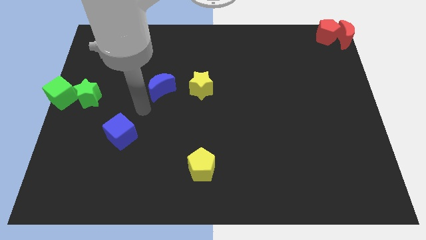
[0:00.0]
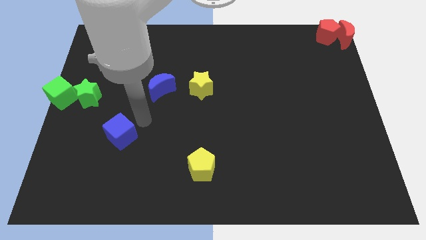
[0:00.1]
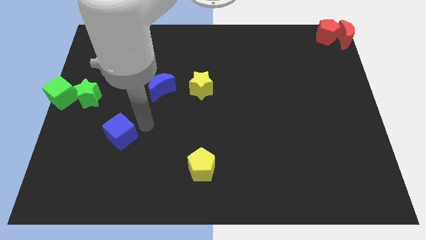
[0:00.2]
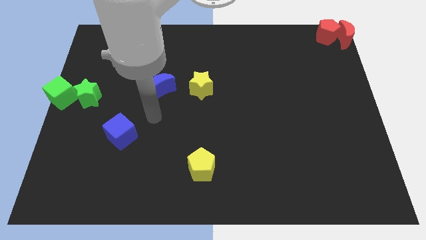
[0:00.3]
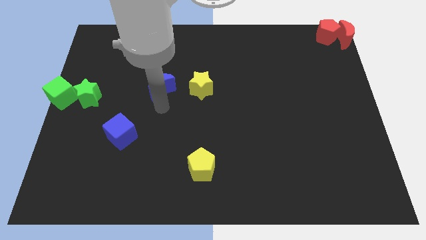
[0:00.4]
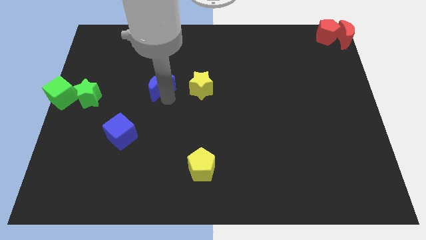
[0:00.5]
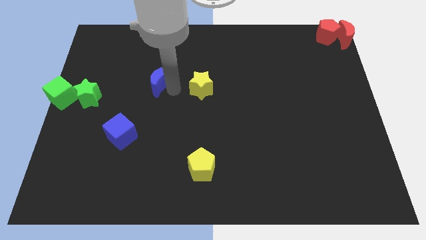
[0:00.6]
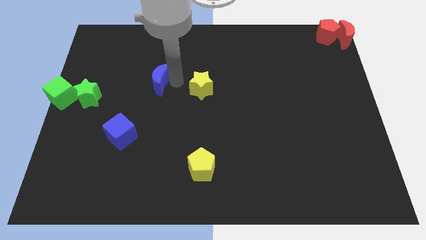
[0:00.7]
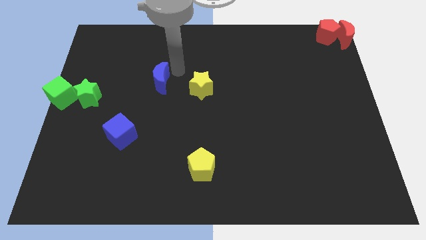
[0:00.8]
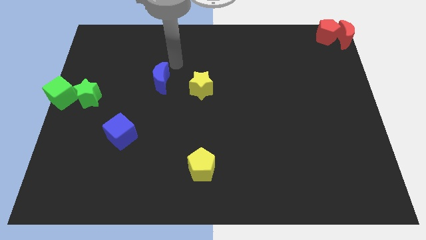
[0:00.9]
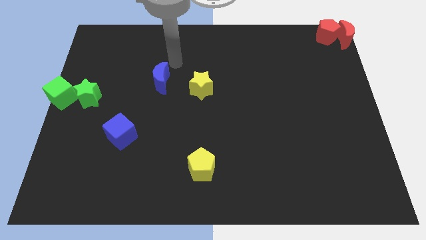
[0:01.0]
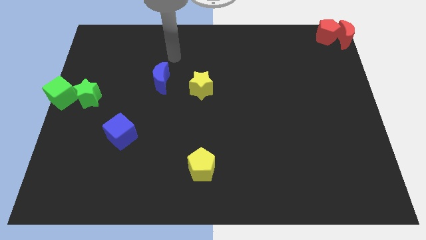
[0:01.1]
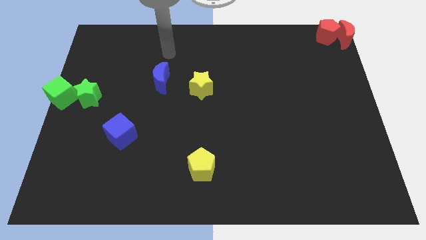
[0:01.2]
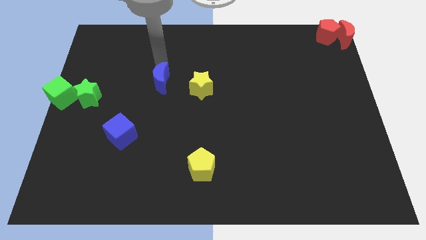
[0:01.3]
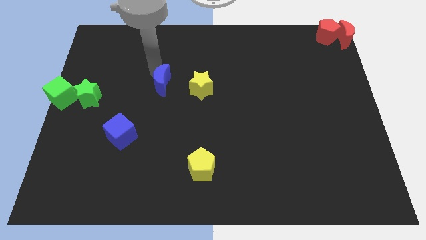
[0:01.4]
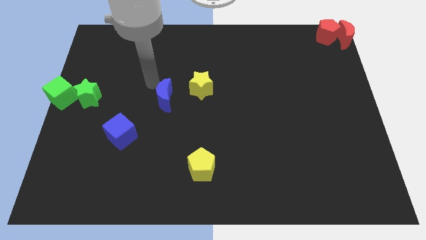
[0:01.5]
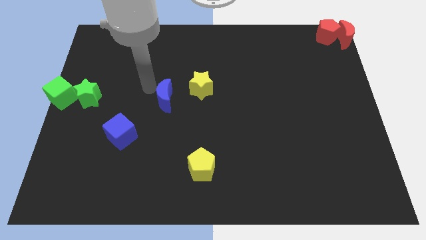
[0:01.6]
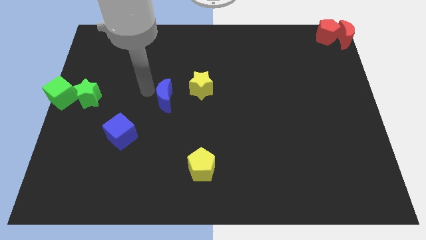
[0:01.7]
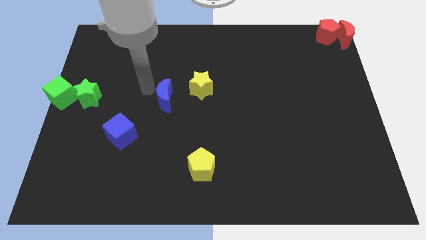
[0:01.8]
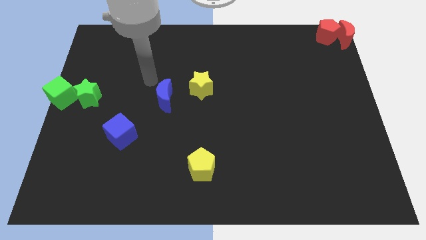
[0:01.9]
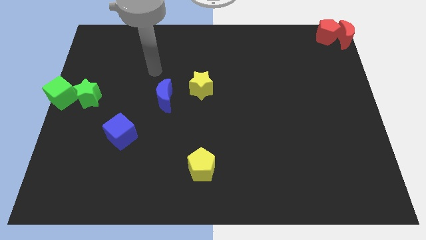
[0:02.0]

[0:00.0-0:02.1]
push the blue crescent to the bottom slightly

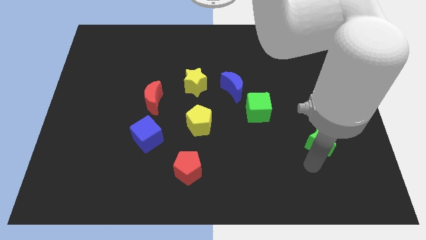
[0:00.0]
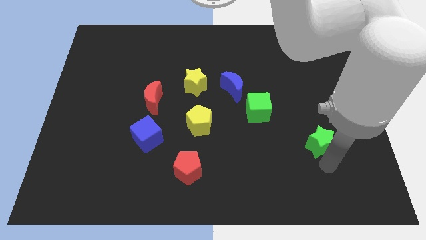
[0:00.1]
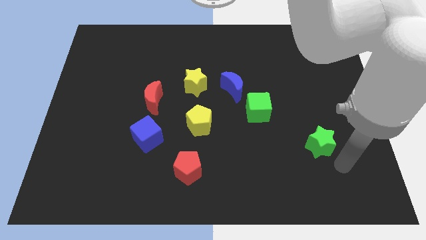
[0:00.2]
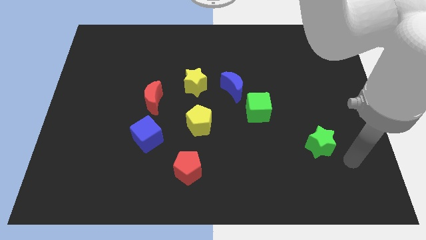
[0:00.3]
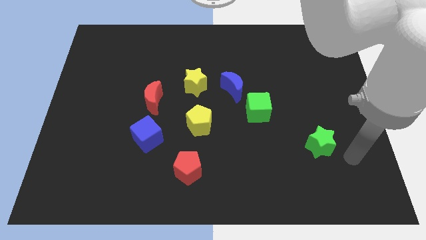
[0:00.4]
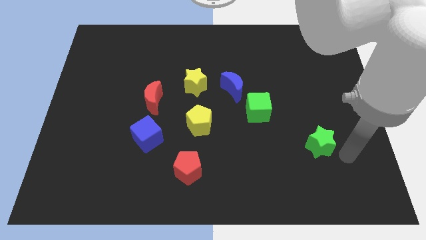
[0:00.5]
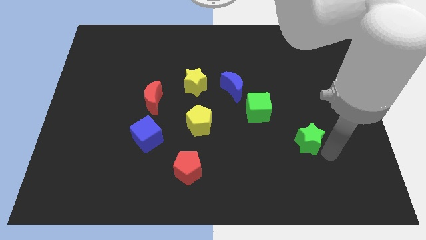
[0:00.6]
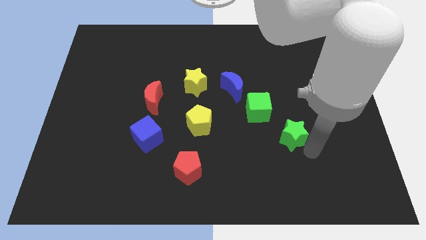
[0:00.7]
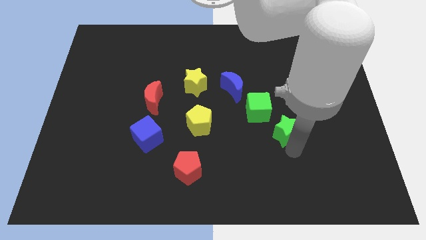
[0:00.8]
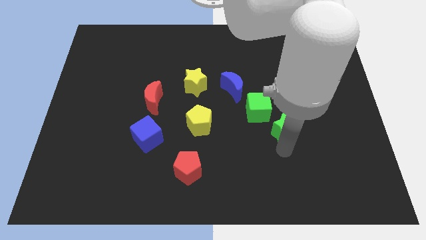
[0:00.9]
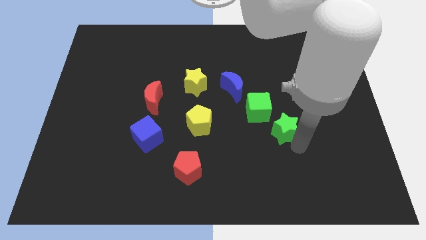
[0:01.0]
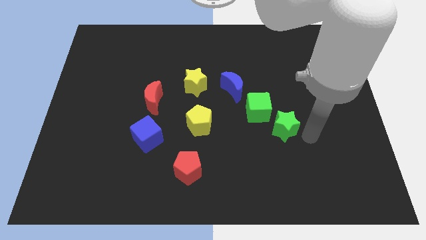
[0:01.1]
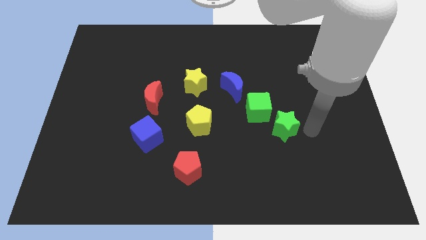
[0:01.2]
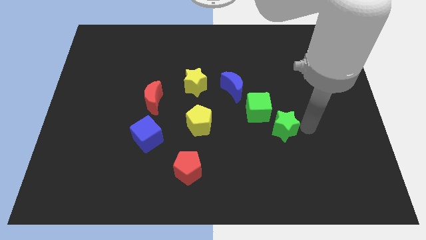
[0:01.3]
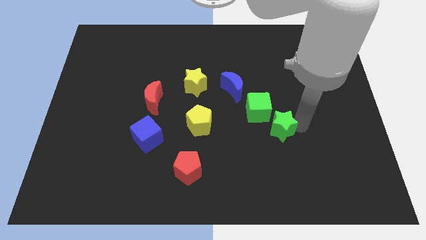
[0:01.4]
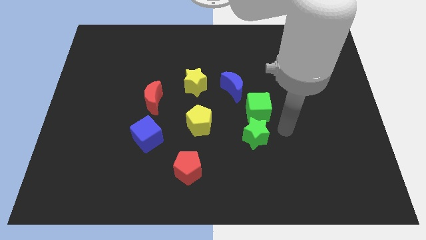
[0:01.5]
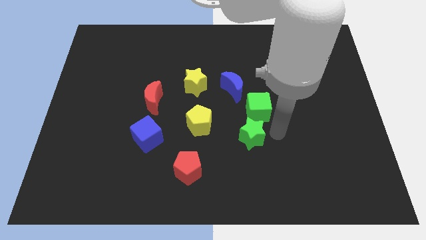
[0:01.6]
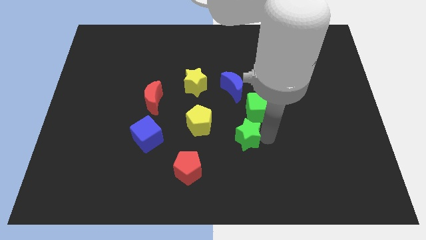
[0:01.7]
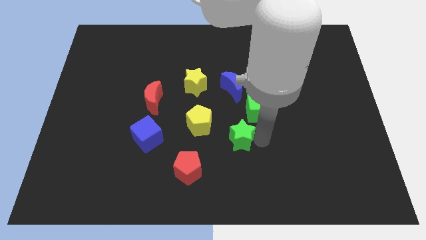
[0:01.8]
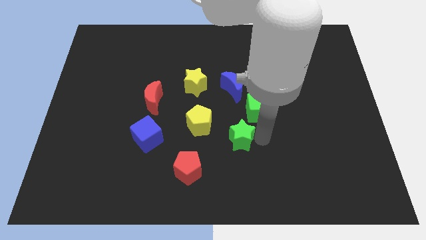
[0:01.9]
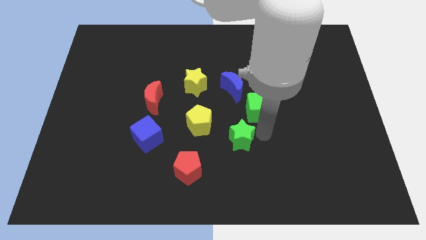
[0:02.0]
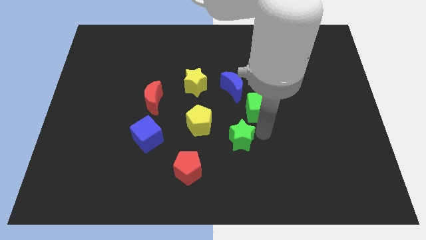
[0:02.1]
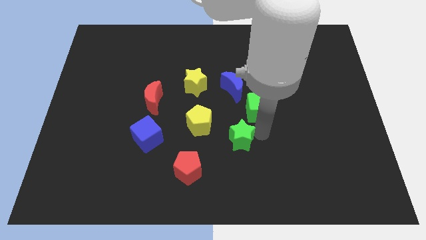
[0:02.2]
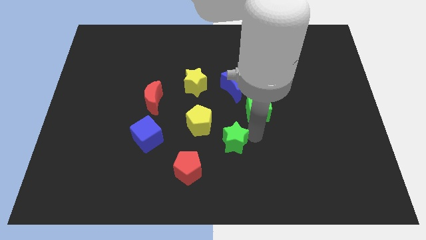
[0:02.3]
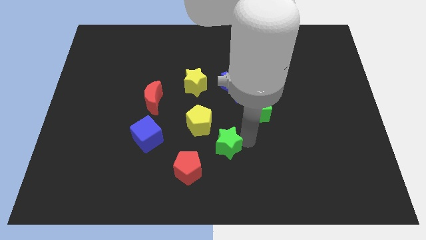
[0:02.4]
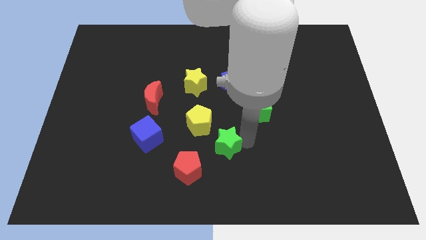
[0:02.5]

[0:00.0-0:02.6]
place the green star beside the green cube to form a circle

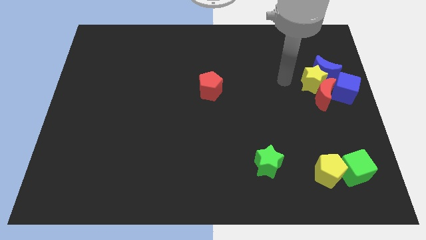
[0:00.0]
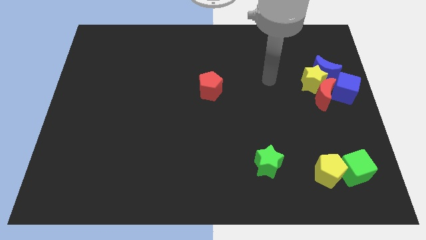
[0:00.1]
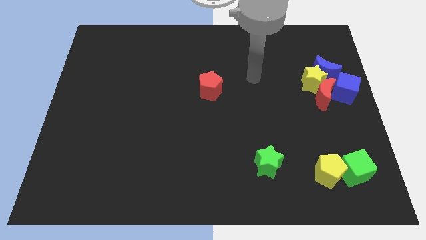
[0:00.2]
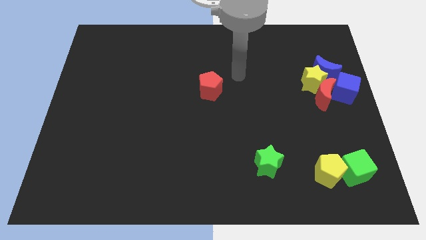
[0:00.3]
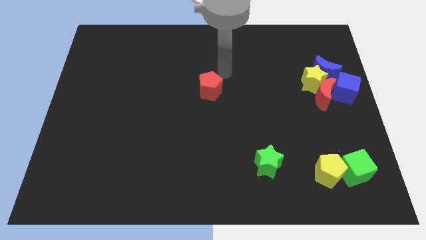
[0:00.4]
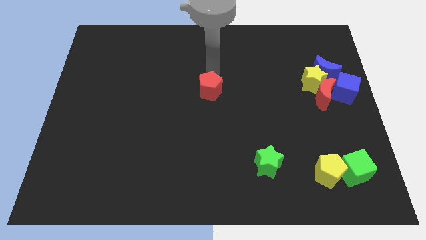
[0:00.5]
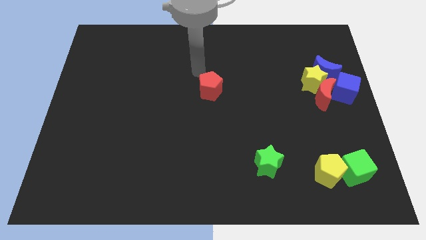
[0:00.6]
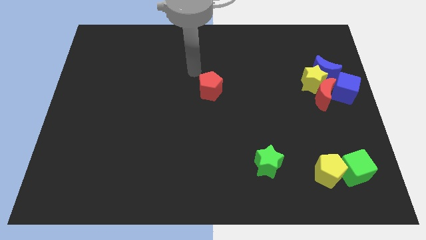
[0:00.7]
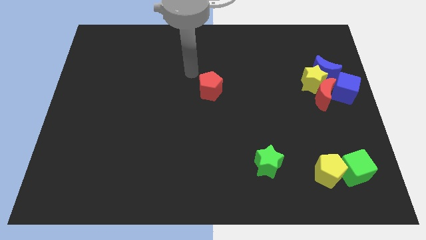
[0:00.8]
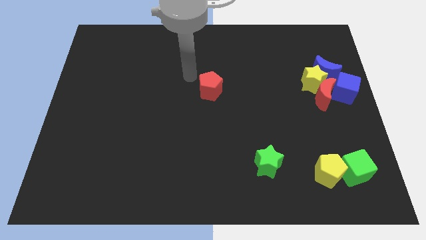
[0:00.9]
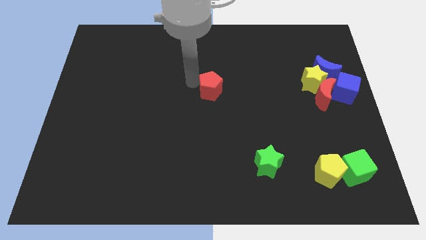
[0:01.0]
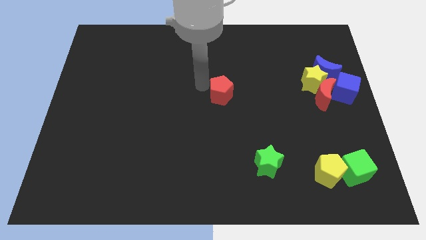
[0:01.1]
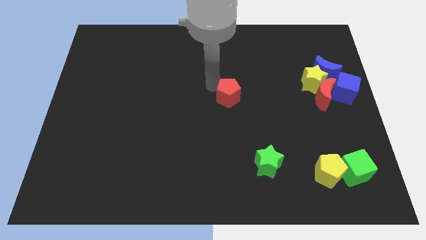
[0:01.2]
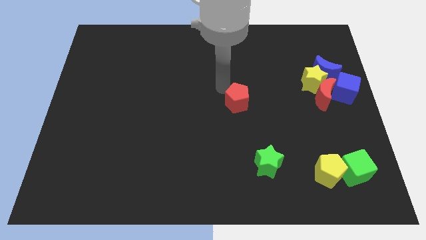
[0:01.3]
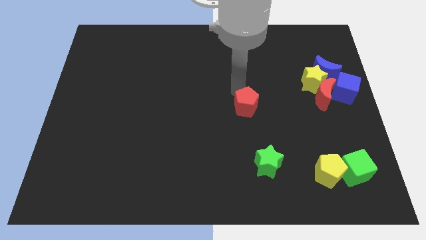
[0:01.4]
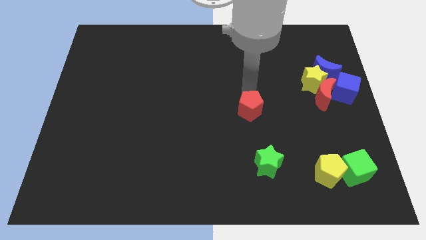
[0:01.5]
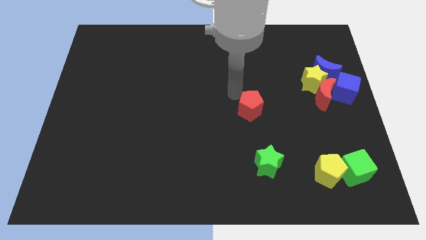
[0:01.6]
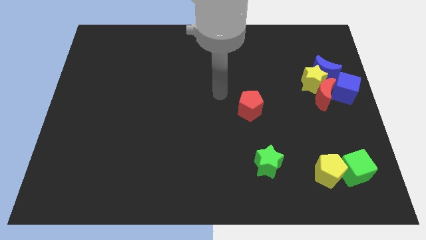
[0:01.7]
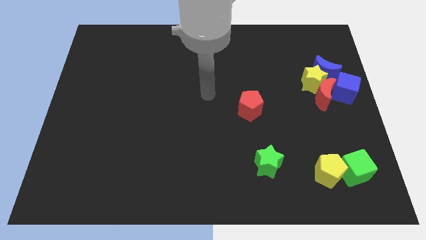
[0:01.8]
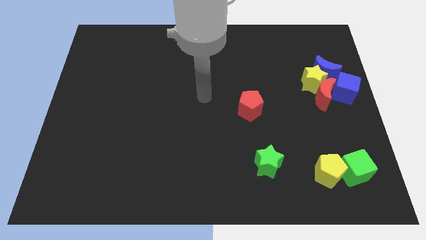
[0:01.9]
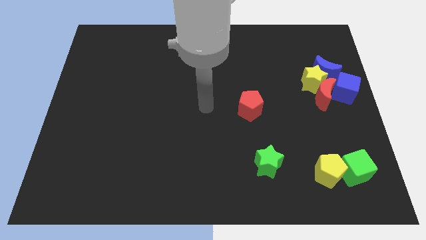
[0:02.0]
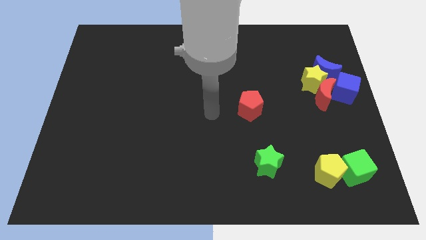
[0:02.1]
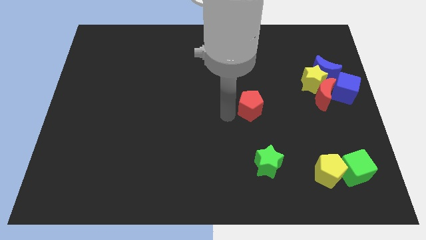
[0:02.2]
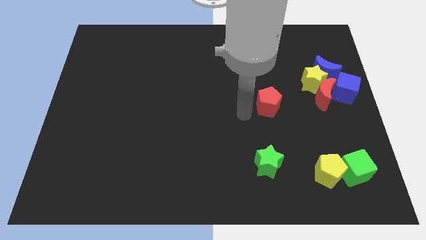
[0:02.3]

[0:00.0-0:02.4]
move red pentagon towards red crescent

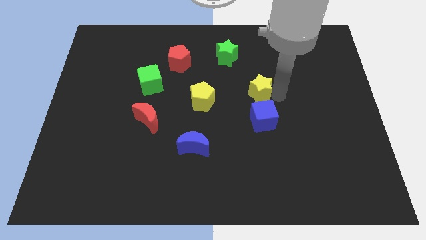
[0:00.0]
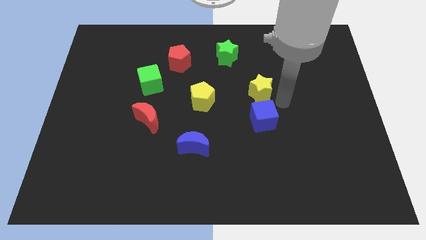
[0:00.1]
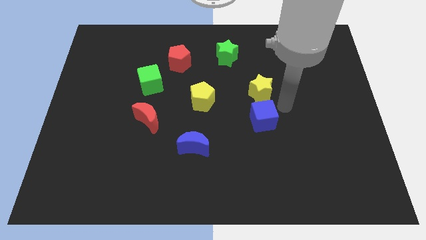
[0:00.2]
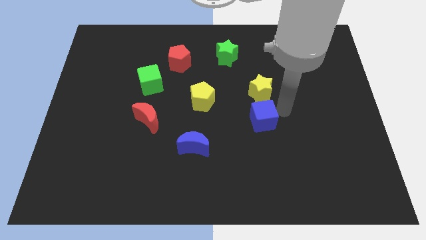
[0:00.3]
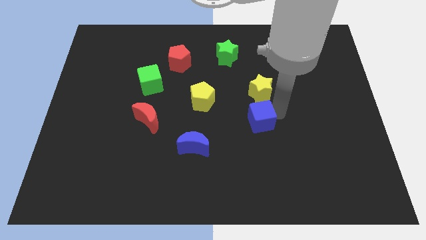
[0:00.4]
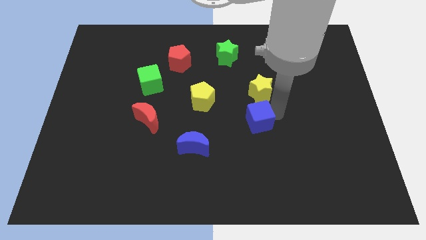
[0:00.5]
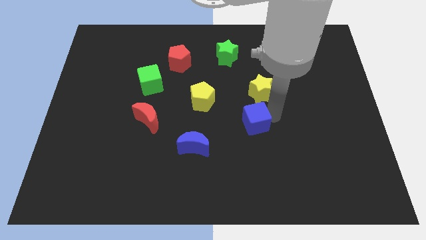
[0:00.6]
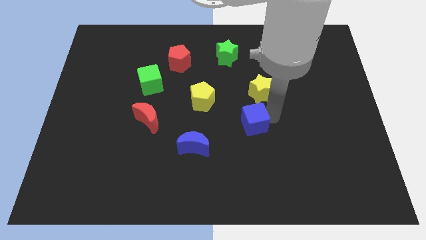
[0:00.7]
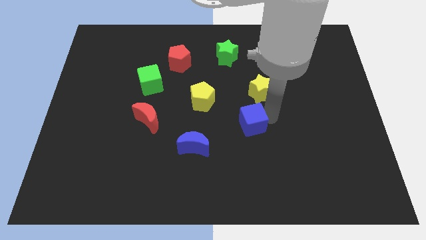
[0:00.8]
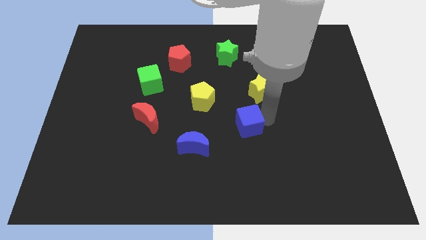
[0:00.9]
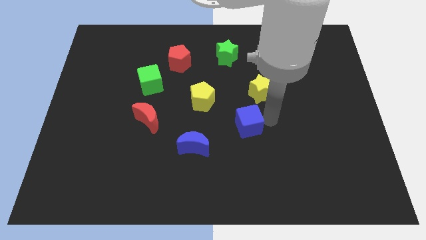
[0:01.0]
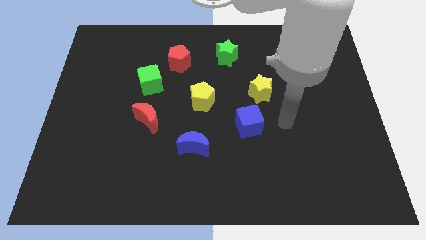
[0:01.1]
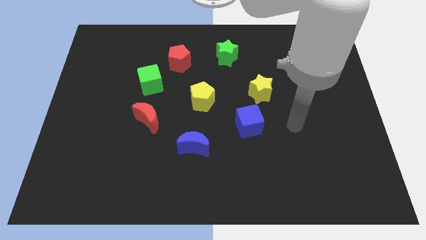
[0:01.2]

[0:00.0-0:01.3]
move blue cube slightly left

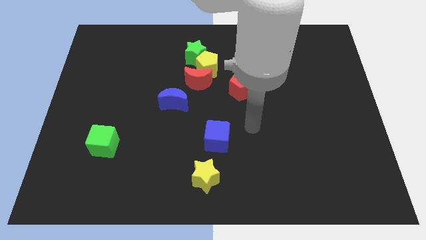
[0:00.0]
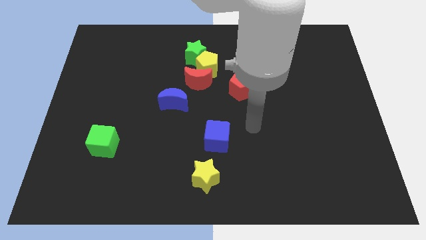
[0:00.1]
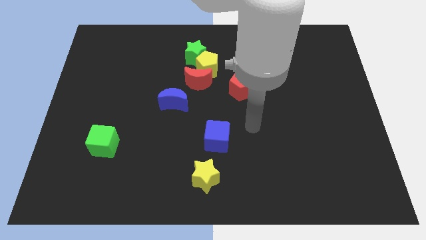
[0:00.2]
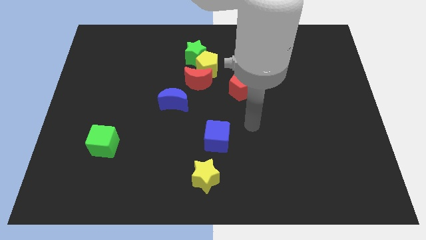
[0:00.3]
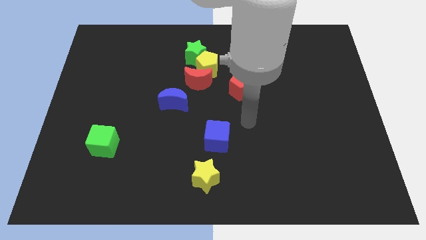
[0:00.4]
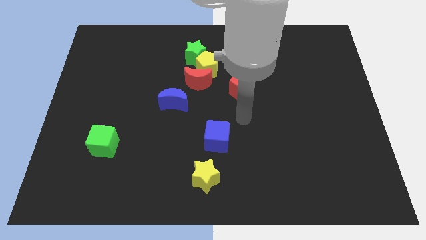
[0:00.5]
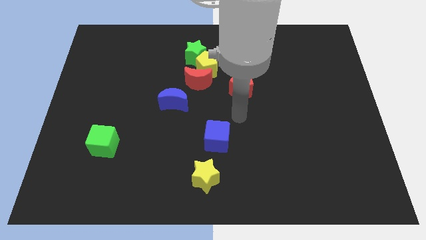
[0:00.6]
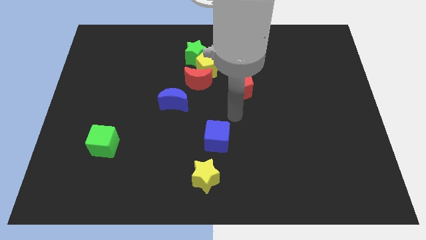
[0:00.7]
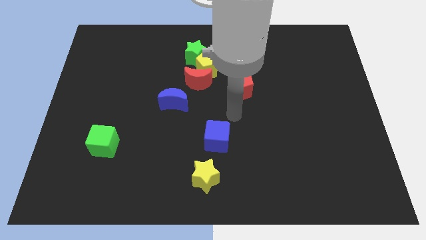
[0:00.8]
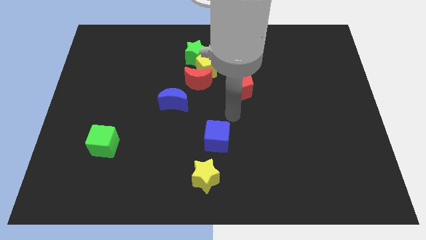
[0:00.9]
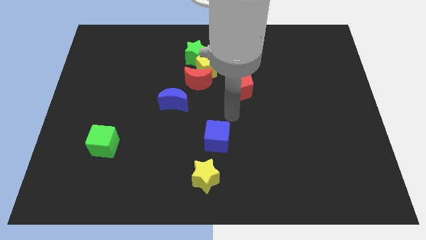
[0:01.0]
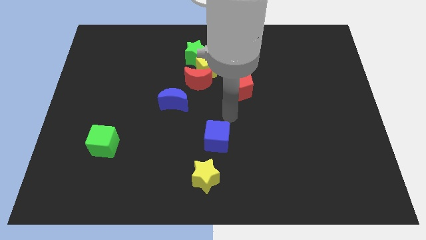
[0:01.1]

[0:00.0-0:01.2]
place your hand in between blue cube and red pentagon
